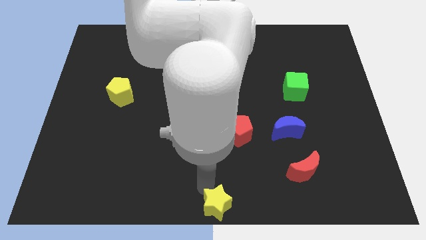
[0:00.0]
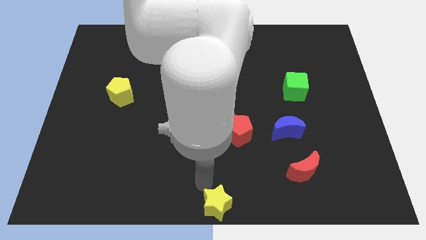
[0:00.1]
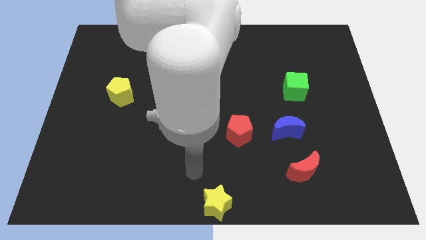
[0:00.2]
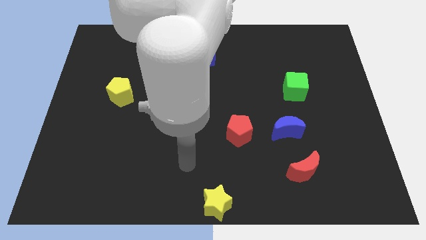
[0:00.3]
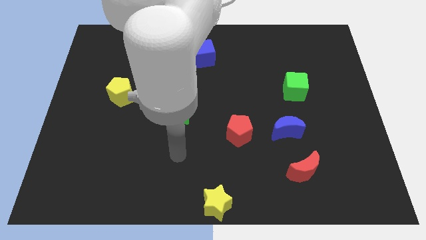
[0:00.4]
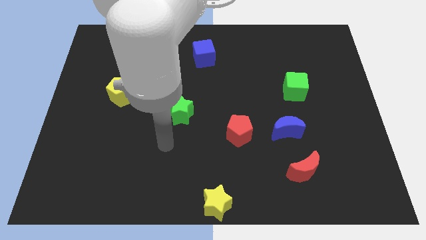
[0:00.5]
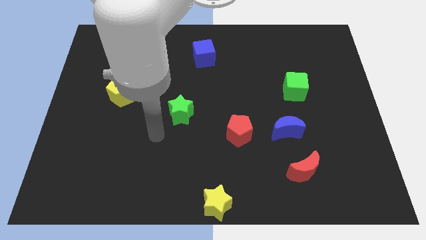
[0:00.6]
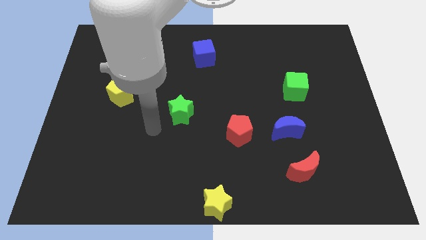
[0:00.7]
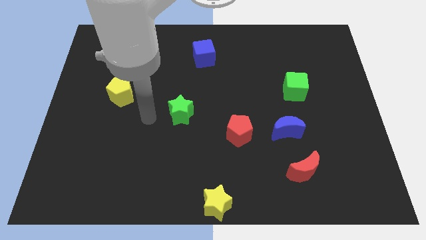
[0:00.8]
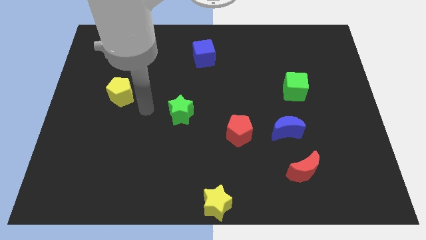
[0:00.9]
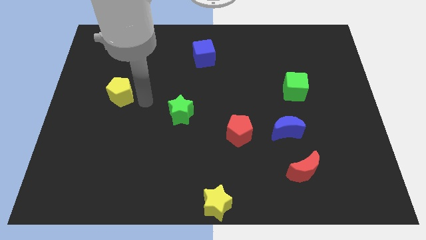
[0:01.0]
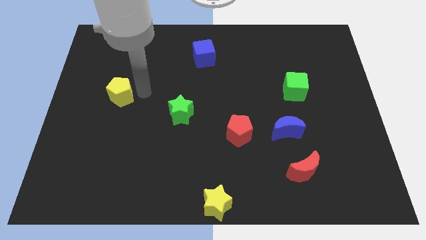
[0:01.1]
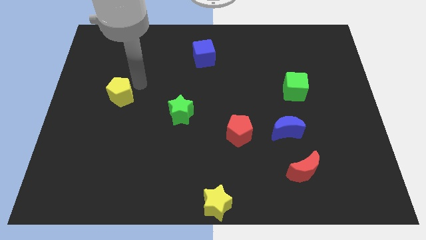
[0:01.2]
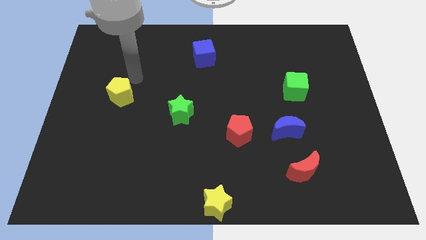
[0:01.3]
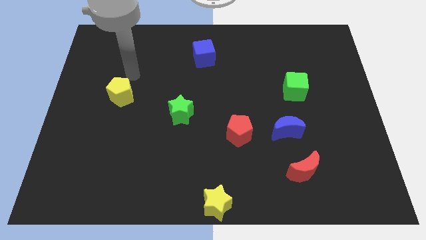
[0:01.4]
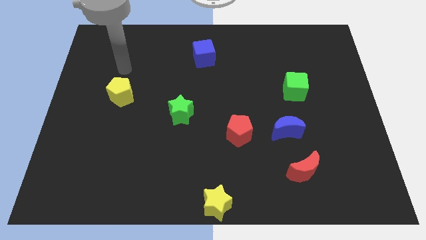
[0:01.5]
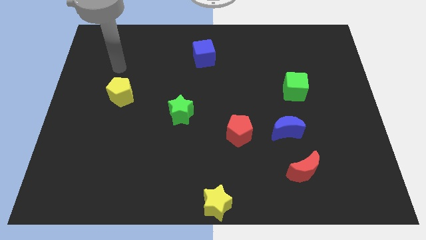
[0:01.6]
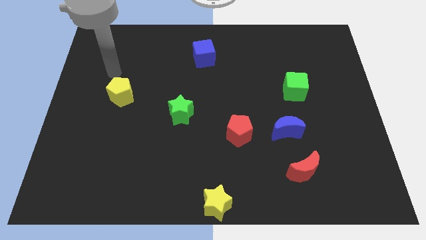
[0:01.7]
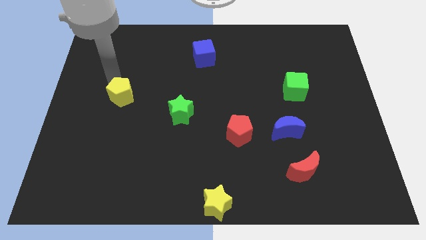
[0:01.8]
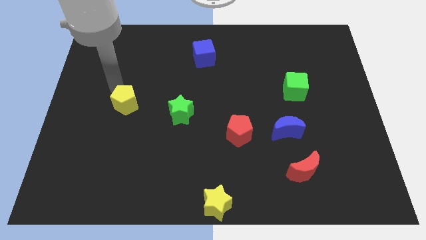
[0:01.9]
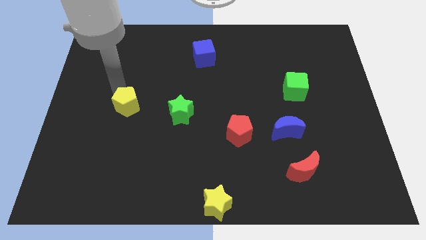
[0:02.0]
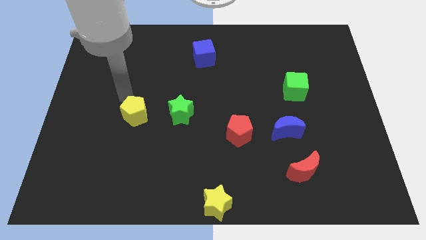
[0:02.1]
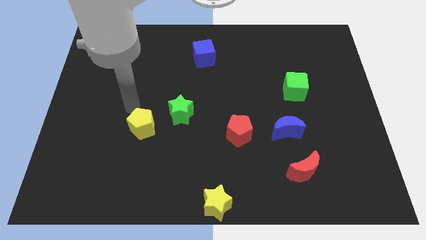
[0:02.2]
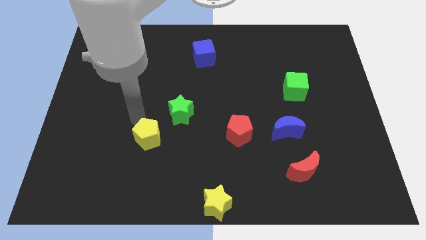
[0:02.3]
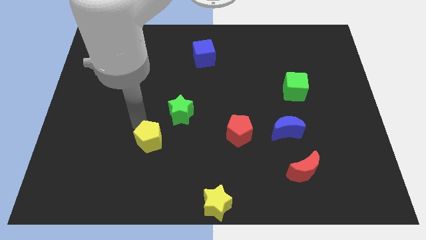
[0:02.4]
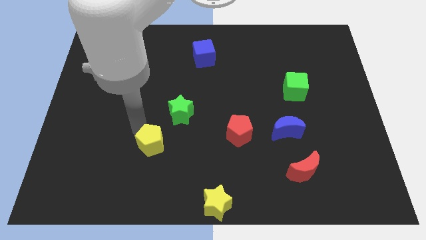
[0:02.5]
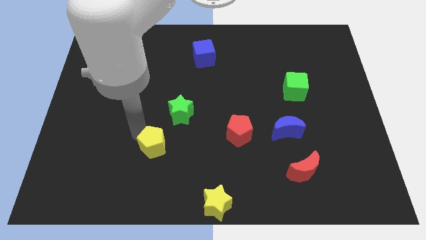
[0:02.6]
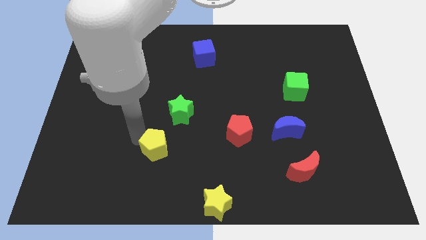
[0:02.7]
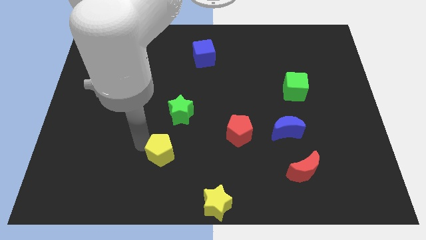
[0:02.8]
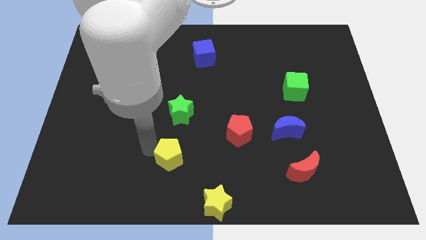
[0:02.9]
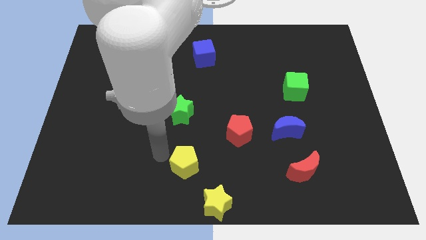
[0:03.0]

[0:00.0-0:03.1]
place the yellow pentagon below the green star

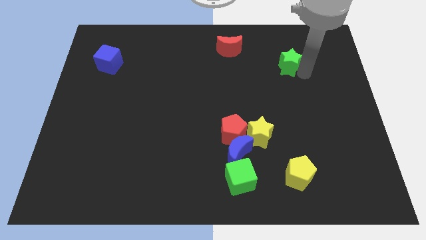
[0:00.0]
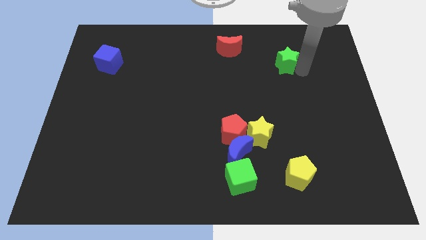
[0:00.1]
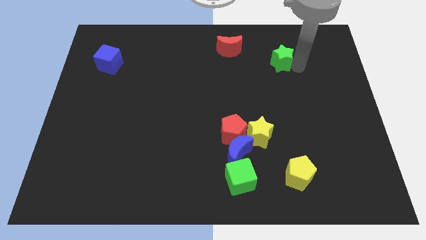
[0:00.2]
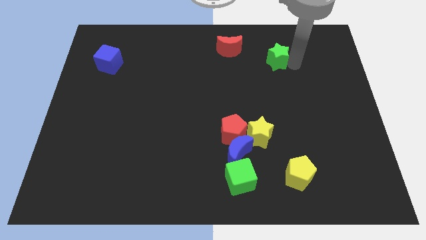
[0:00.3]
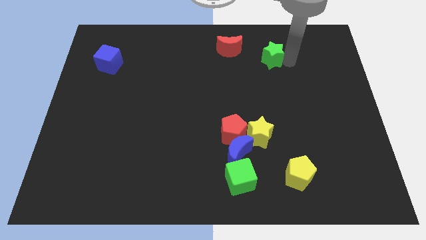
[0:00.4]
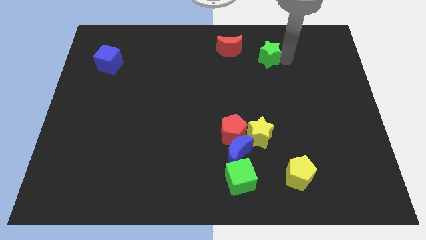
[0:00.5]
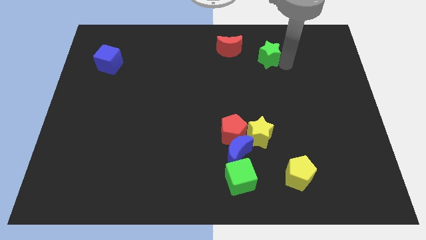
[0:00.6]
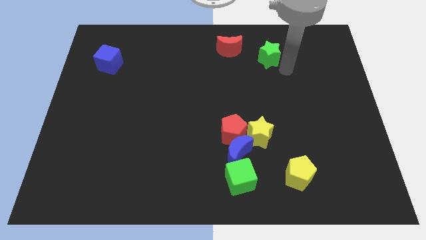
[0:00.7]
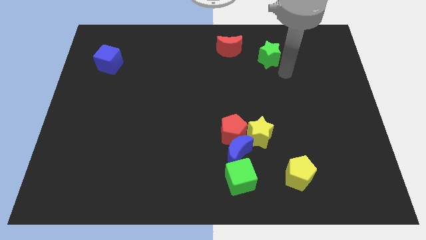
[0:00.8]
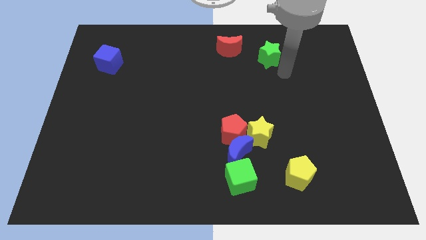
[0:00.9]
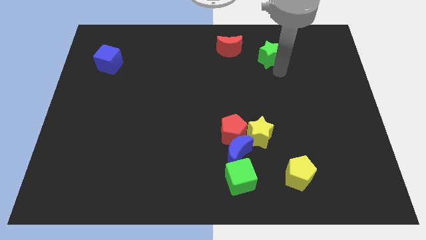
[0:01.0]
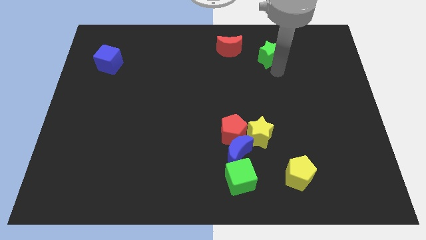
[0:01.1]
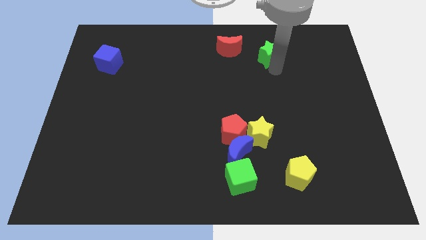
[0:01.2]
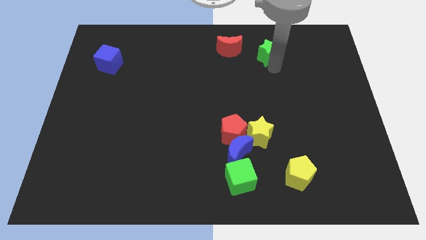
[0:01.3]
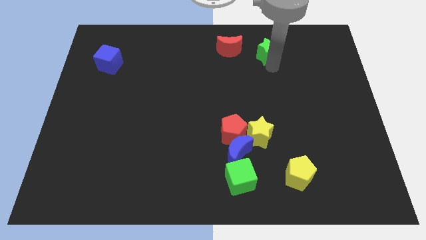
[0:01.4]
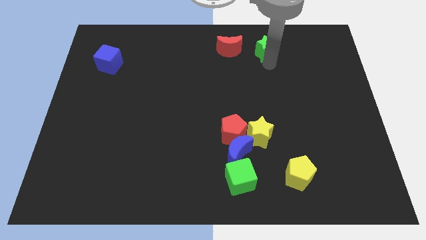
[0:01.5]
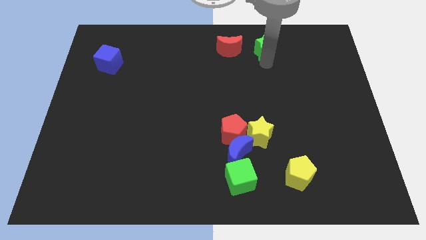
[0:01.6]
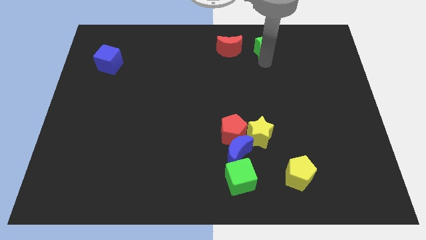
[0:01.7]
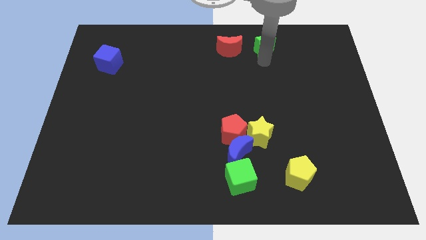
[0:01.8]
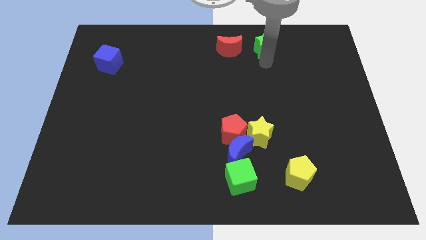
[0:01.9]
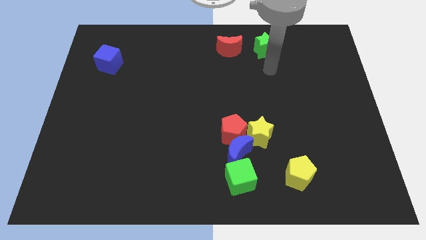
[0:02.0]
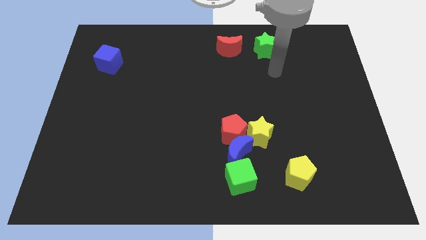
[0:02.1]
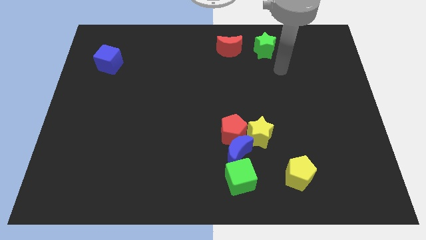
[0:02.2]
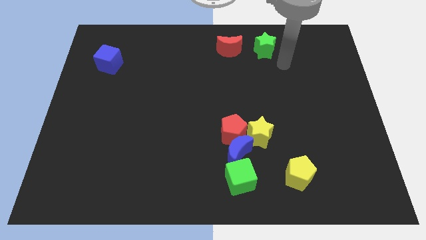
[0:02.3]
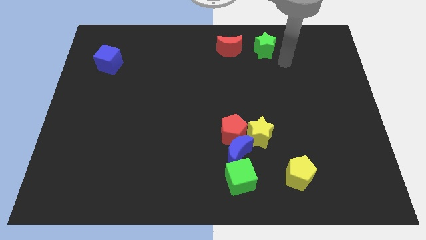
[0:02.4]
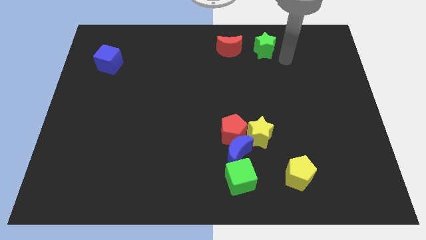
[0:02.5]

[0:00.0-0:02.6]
place green star to the right of red crescent

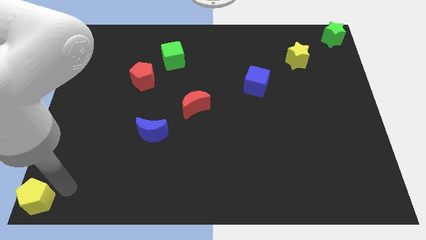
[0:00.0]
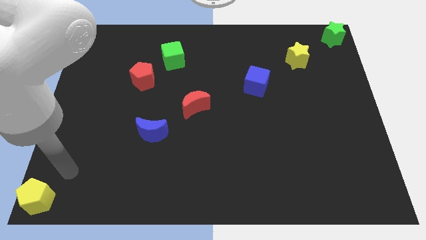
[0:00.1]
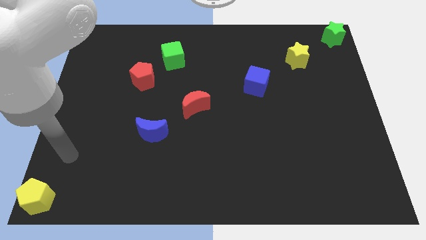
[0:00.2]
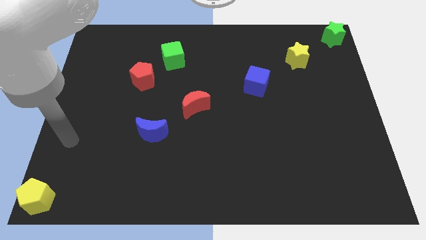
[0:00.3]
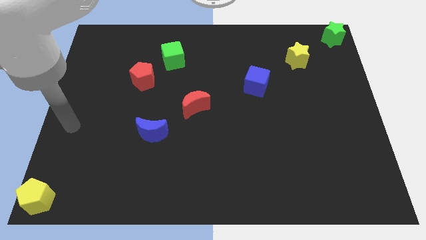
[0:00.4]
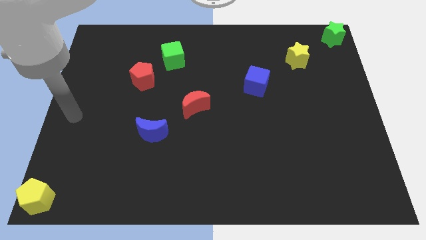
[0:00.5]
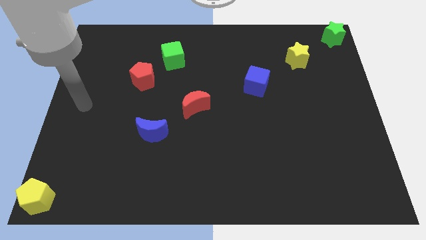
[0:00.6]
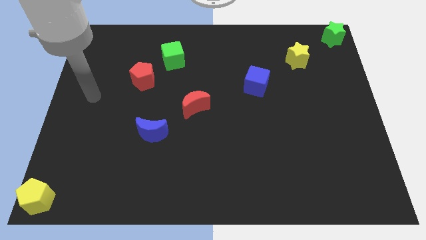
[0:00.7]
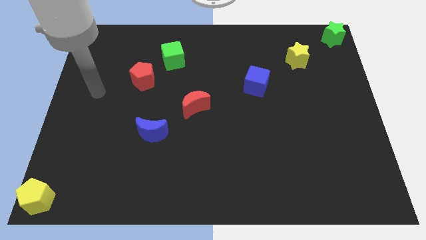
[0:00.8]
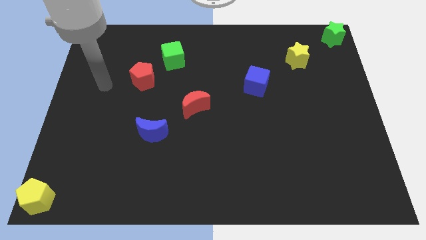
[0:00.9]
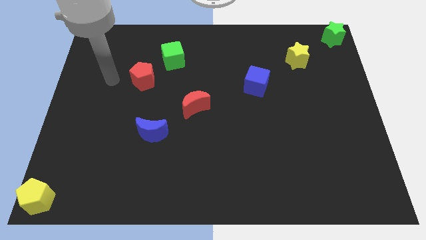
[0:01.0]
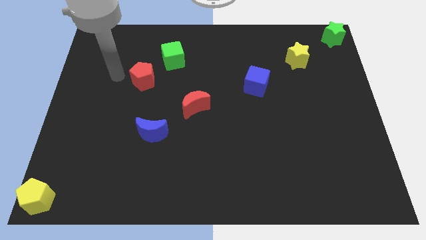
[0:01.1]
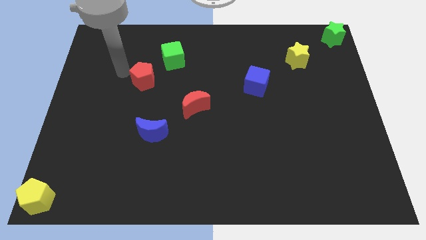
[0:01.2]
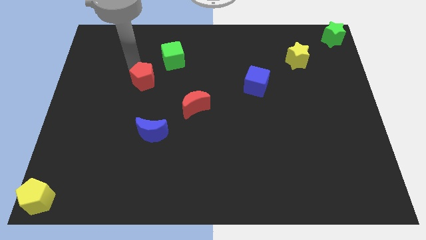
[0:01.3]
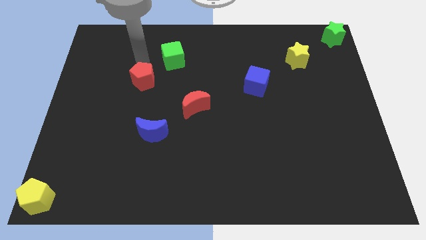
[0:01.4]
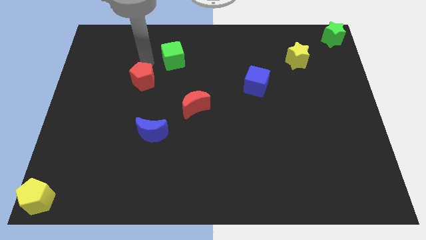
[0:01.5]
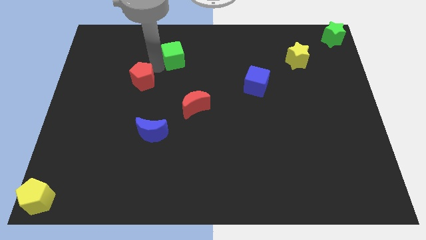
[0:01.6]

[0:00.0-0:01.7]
point the arm in between the red pentagon and the green cube

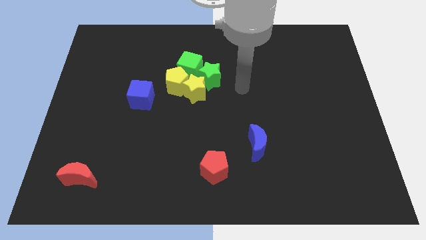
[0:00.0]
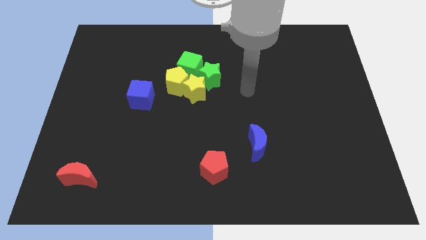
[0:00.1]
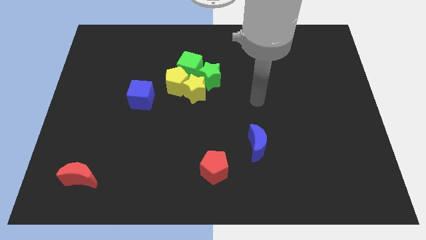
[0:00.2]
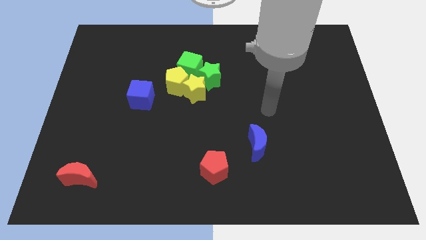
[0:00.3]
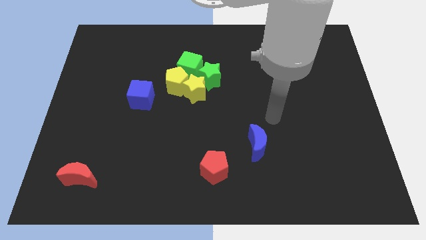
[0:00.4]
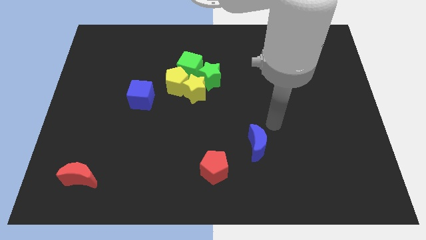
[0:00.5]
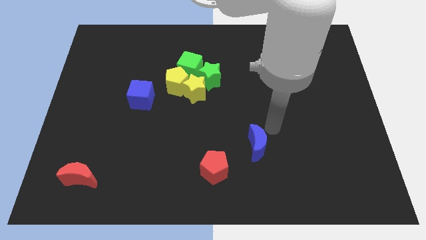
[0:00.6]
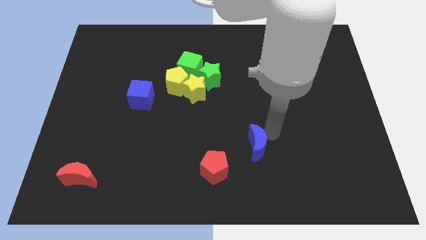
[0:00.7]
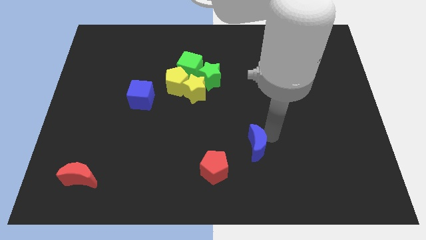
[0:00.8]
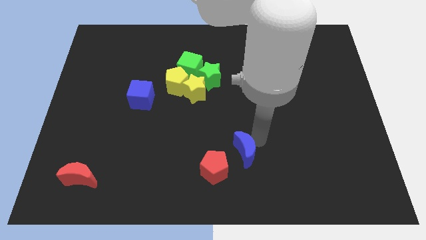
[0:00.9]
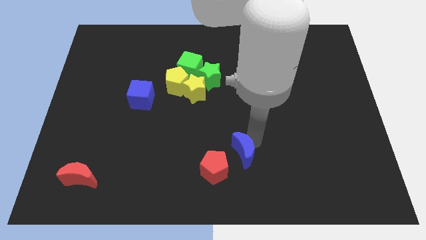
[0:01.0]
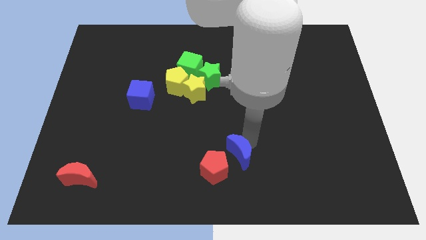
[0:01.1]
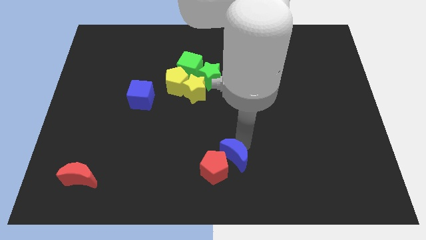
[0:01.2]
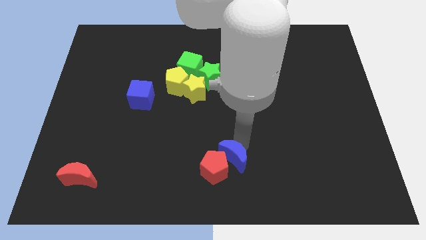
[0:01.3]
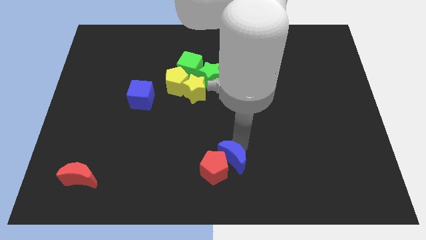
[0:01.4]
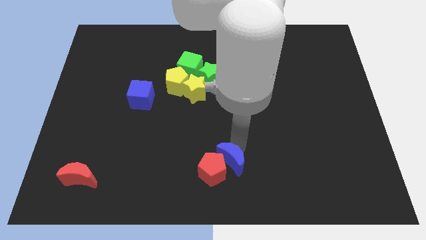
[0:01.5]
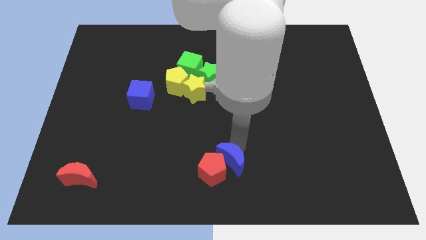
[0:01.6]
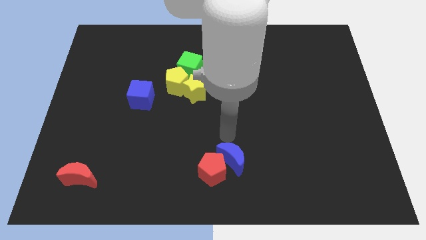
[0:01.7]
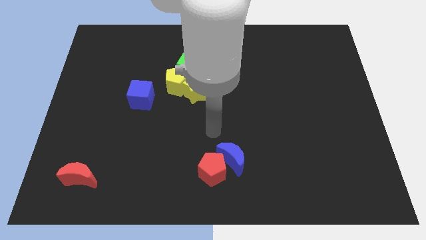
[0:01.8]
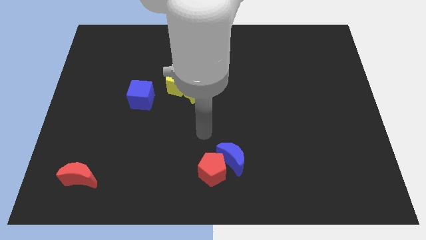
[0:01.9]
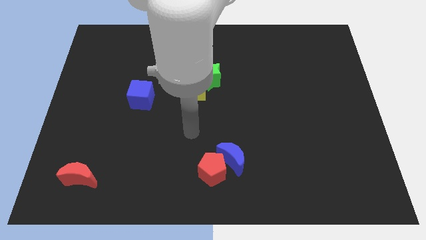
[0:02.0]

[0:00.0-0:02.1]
push blue moon into red pentagon
